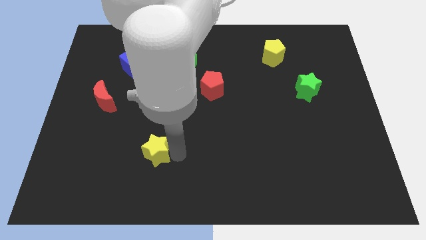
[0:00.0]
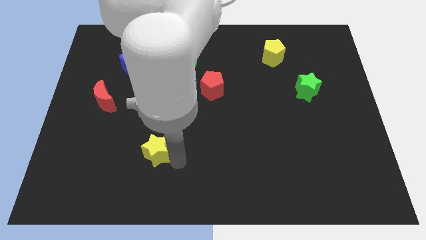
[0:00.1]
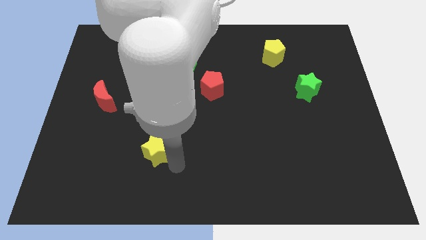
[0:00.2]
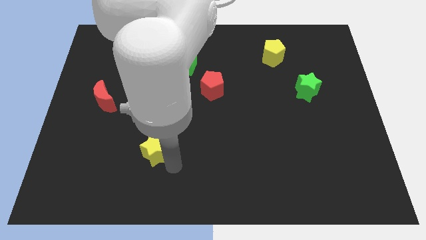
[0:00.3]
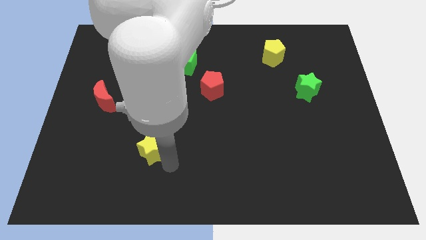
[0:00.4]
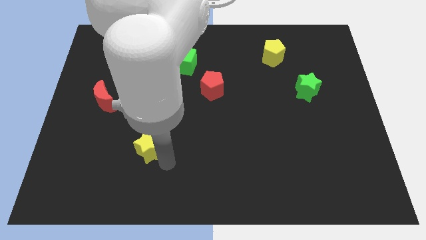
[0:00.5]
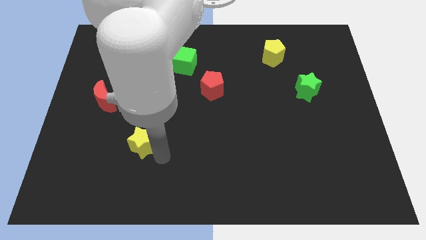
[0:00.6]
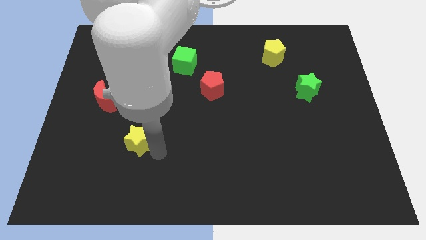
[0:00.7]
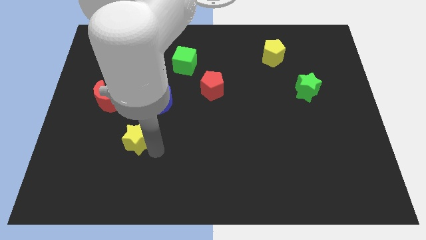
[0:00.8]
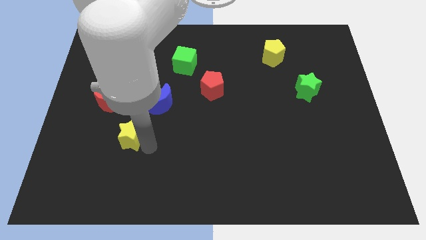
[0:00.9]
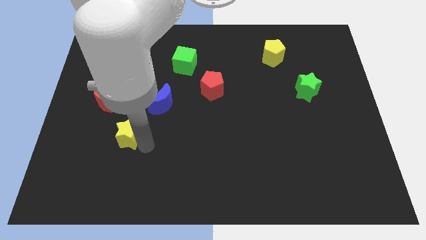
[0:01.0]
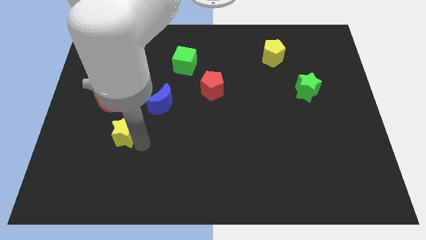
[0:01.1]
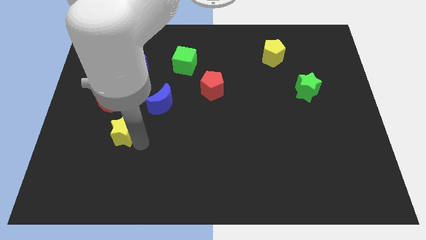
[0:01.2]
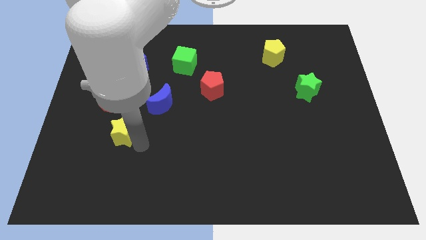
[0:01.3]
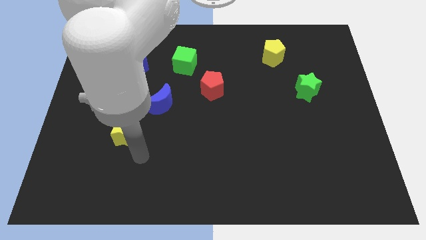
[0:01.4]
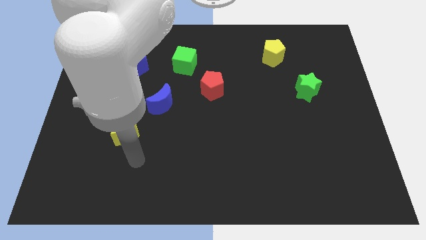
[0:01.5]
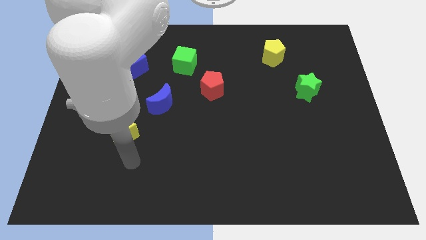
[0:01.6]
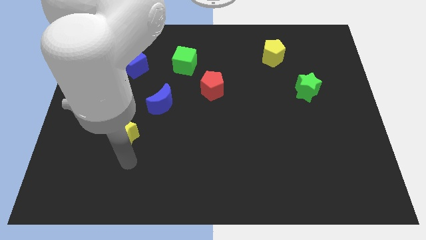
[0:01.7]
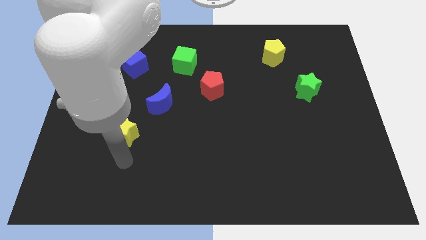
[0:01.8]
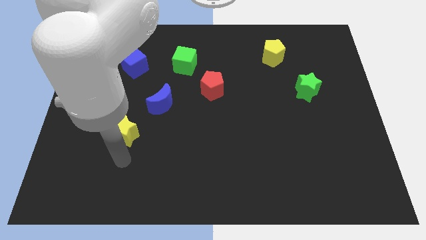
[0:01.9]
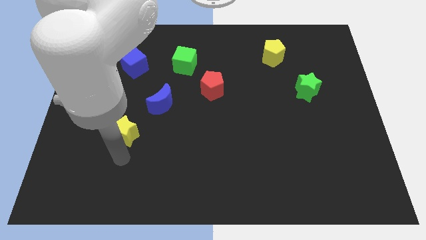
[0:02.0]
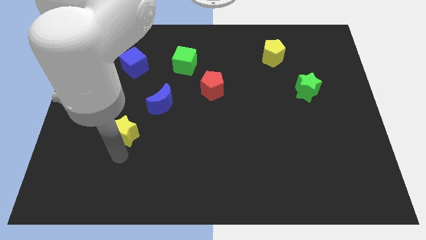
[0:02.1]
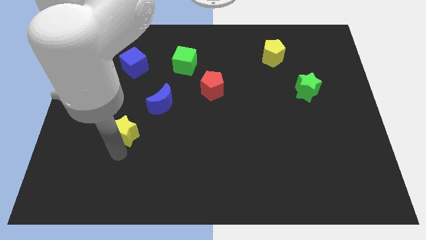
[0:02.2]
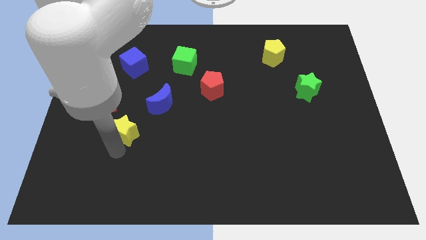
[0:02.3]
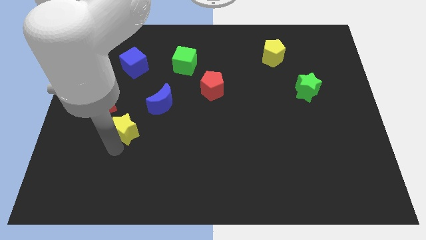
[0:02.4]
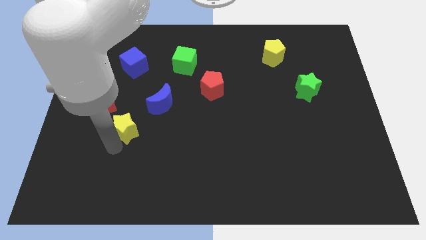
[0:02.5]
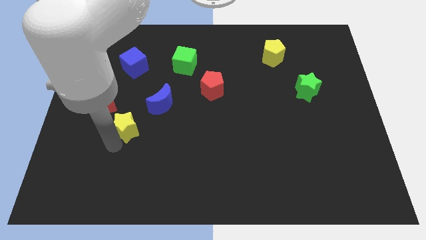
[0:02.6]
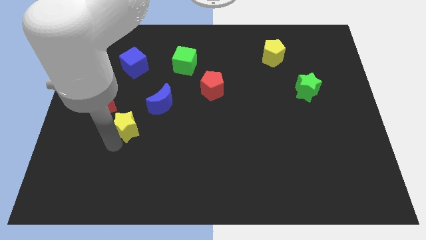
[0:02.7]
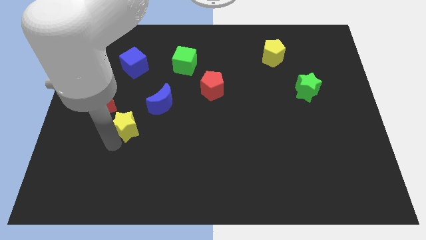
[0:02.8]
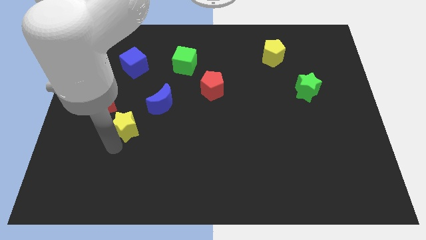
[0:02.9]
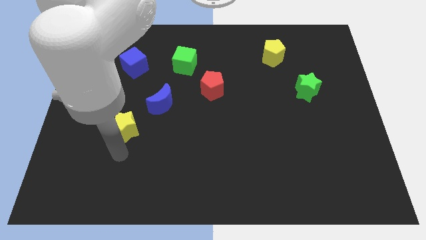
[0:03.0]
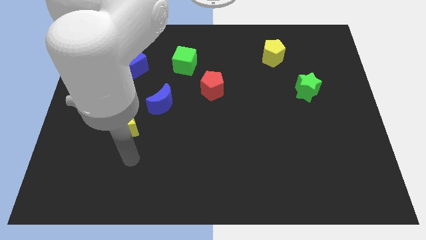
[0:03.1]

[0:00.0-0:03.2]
push the yellow star near the red moon

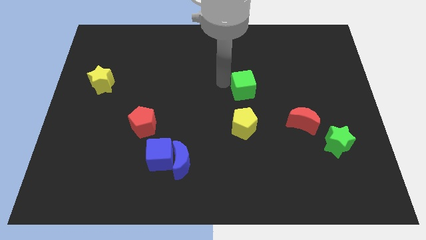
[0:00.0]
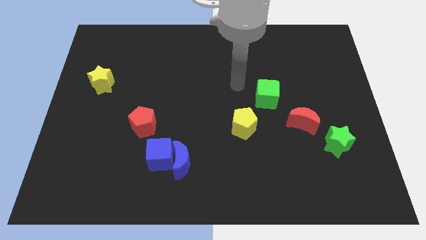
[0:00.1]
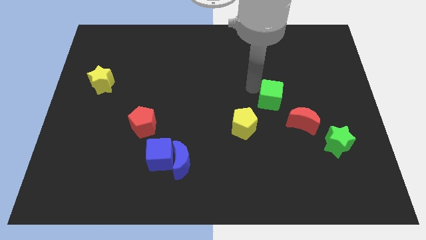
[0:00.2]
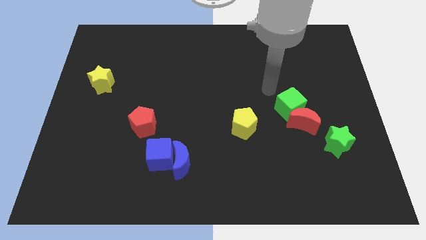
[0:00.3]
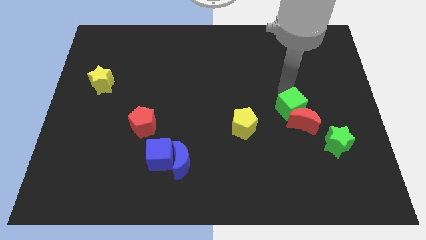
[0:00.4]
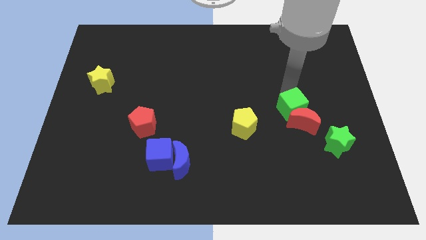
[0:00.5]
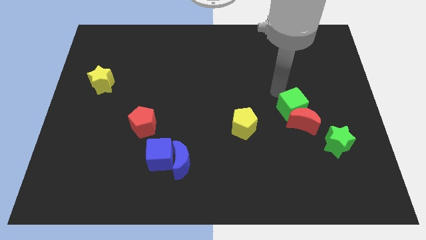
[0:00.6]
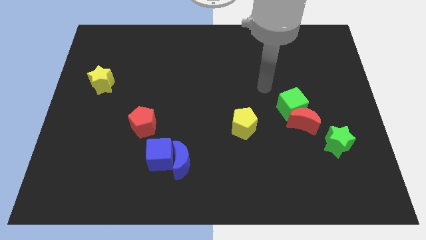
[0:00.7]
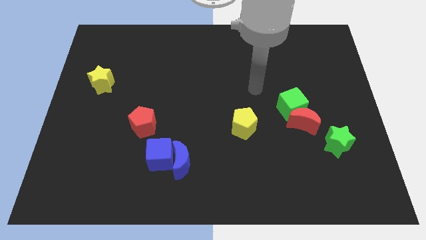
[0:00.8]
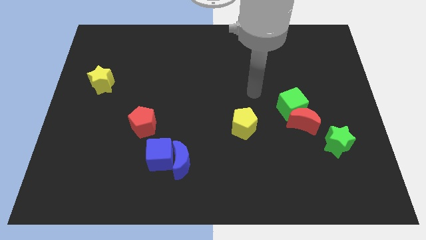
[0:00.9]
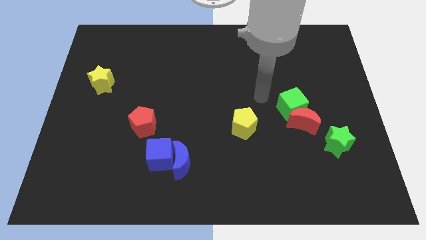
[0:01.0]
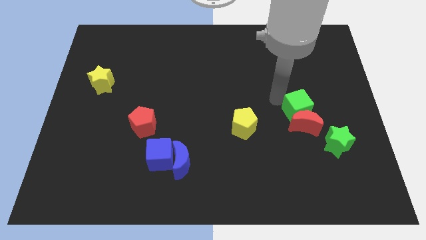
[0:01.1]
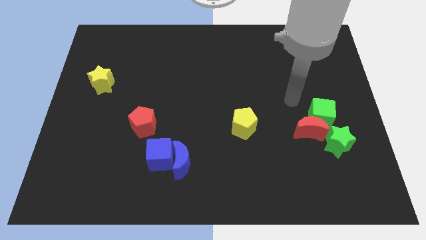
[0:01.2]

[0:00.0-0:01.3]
move green cube into red crescent

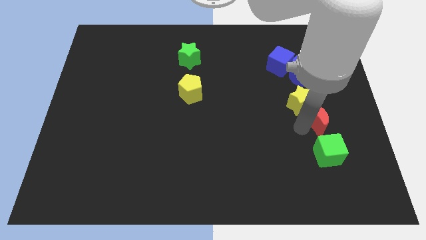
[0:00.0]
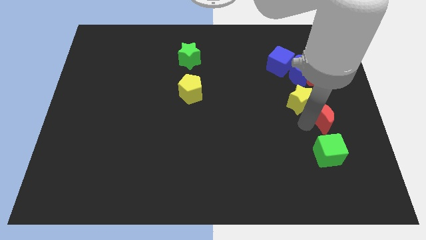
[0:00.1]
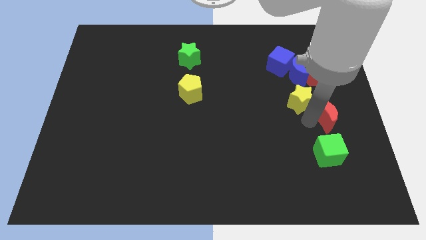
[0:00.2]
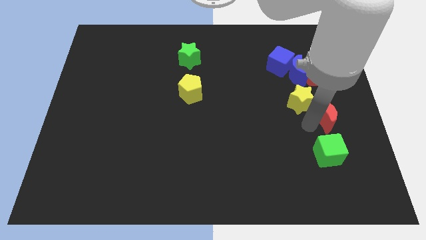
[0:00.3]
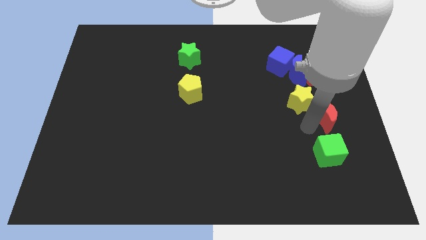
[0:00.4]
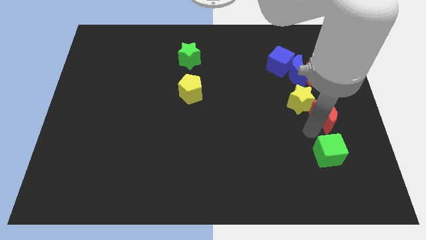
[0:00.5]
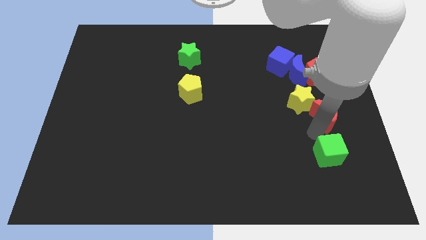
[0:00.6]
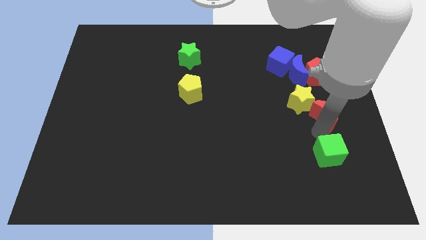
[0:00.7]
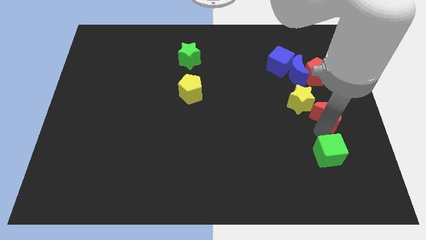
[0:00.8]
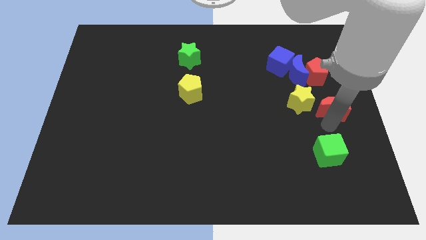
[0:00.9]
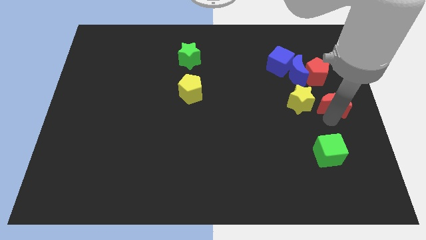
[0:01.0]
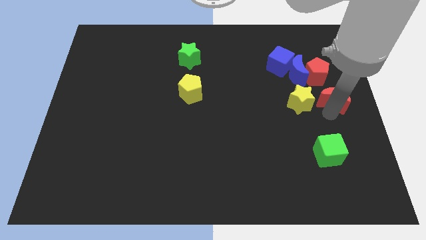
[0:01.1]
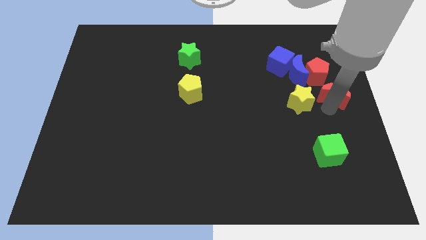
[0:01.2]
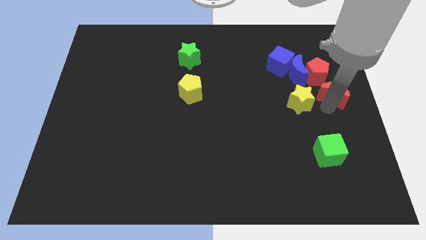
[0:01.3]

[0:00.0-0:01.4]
separate the red crescent from the yellow star

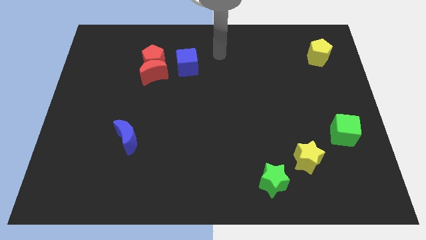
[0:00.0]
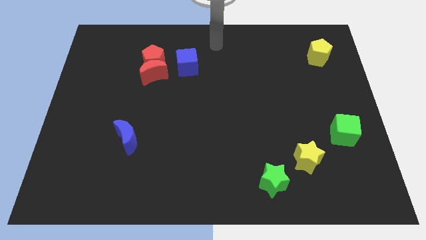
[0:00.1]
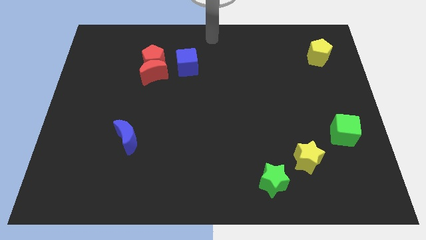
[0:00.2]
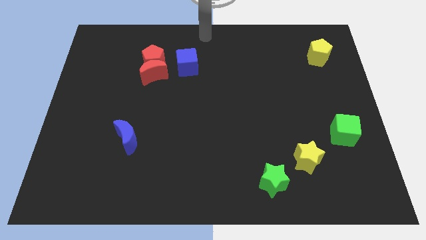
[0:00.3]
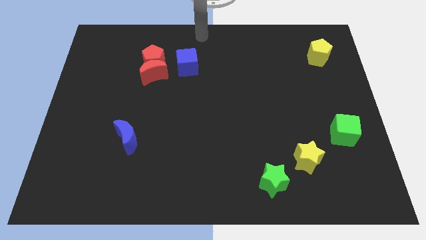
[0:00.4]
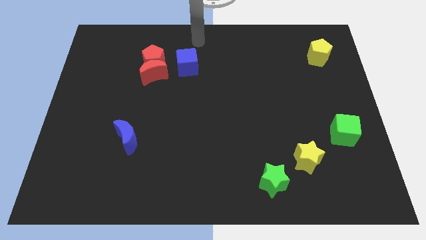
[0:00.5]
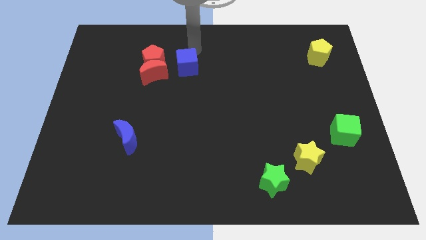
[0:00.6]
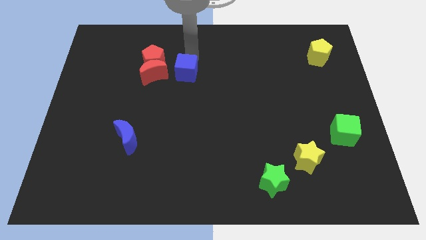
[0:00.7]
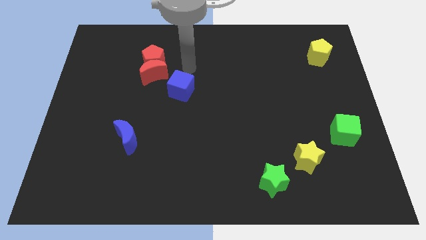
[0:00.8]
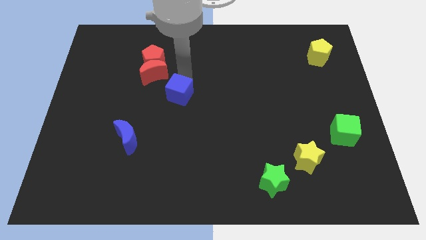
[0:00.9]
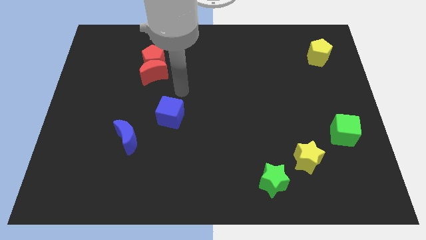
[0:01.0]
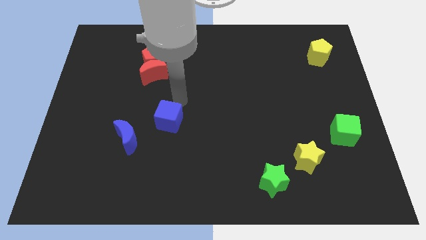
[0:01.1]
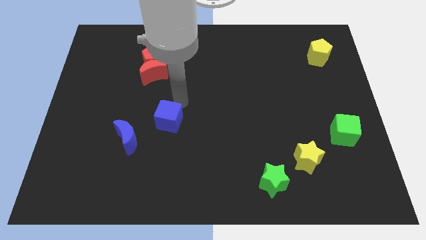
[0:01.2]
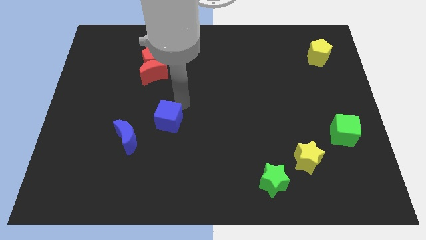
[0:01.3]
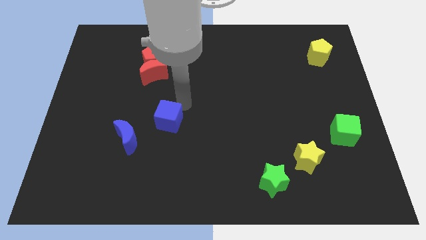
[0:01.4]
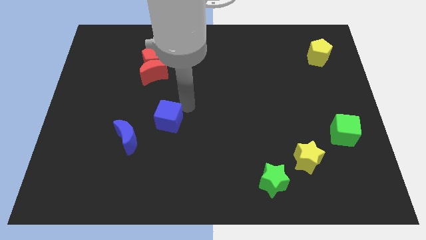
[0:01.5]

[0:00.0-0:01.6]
place the blue cube to the right of the blue moon

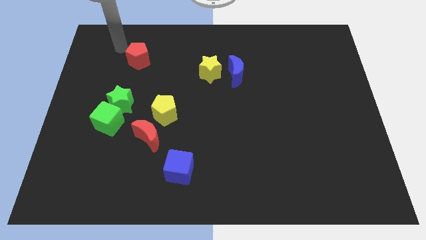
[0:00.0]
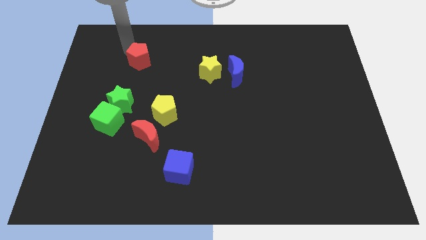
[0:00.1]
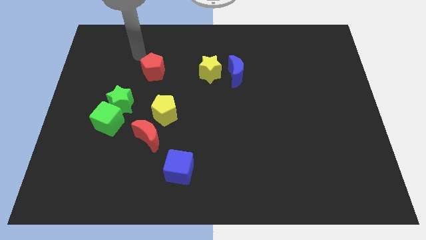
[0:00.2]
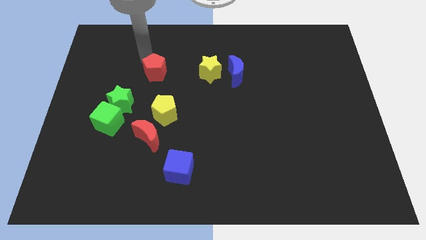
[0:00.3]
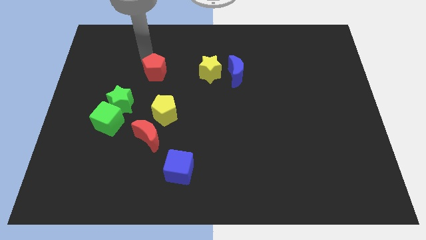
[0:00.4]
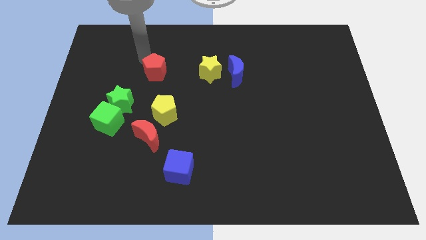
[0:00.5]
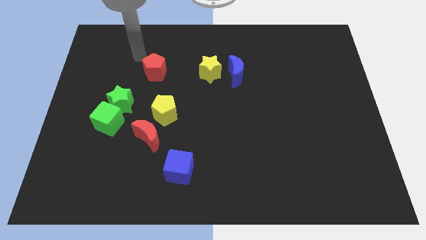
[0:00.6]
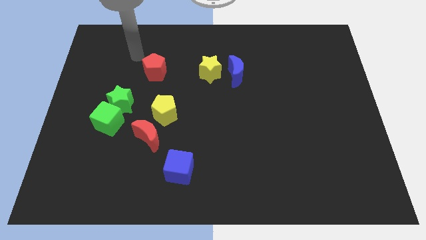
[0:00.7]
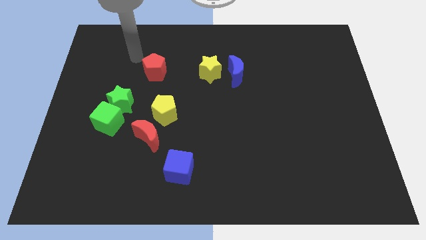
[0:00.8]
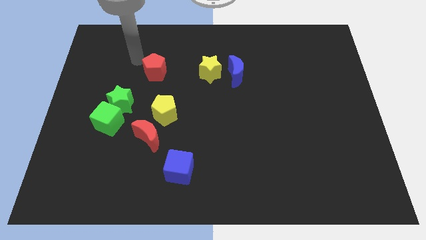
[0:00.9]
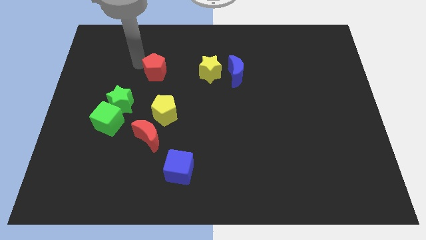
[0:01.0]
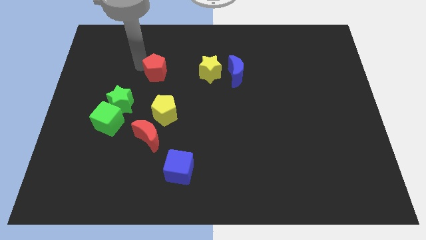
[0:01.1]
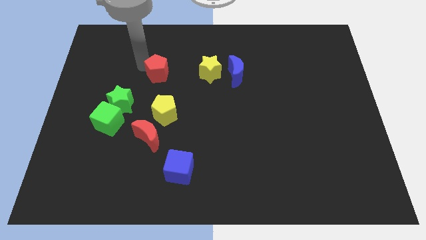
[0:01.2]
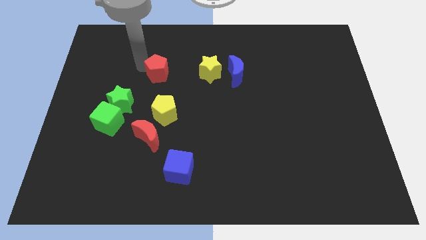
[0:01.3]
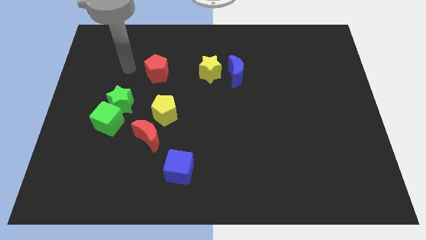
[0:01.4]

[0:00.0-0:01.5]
push red pentagon towards yellow pentagon

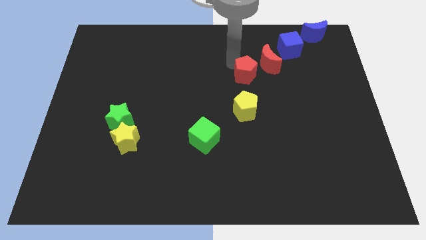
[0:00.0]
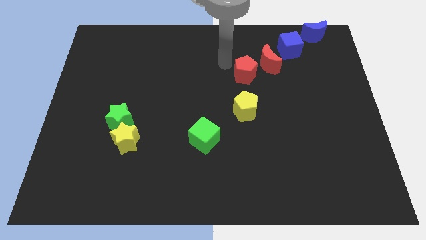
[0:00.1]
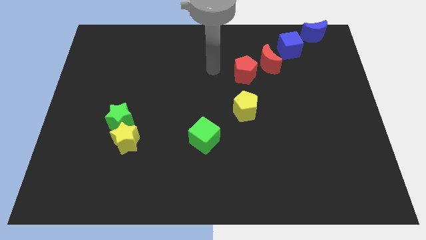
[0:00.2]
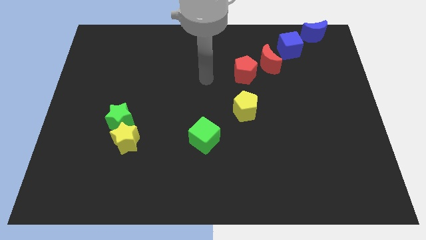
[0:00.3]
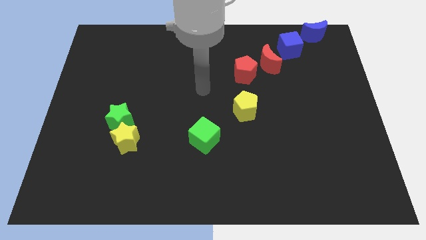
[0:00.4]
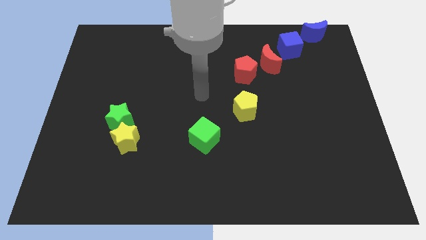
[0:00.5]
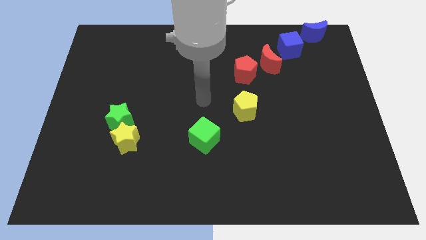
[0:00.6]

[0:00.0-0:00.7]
point your arm at the center of the board
